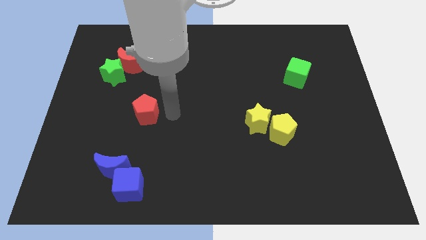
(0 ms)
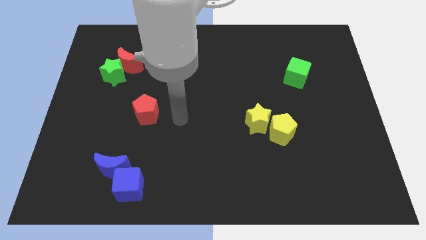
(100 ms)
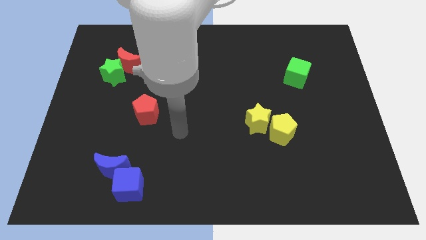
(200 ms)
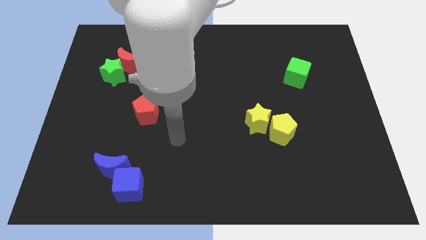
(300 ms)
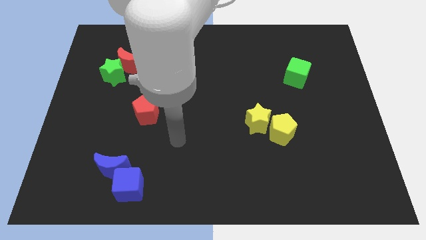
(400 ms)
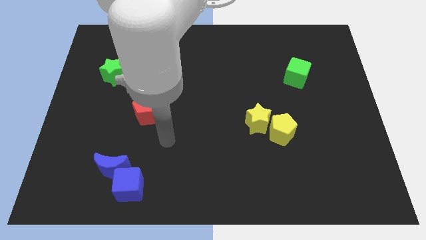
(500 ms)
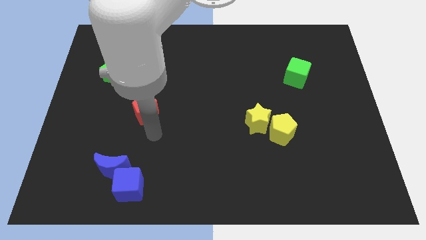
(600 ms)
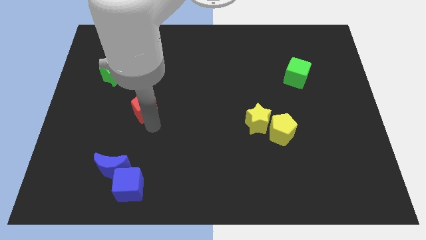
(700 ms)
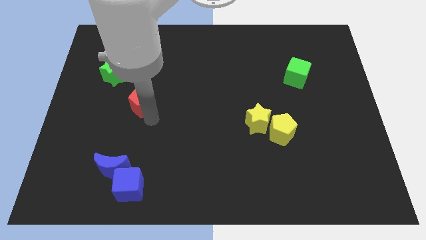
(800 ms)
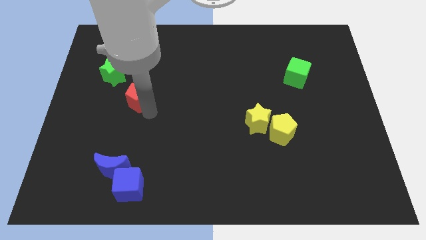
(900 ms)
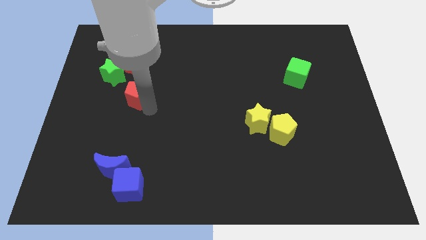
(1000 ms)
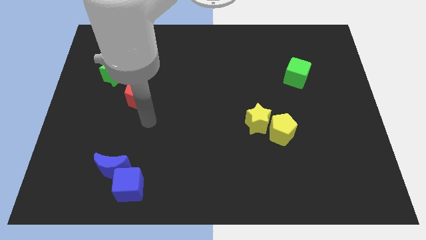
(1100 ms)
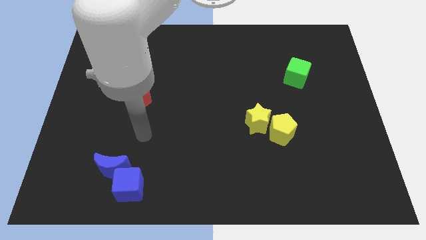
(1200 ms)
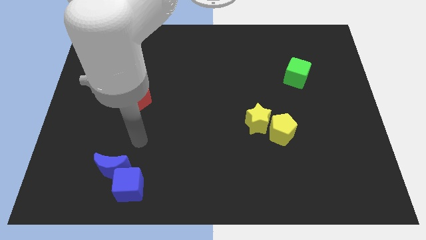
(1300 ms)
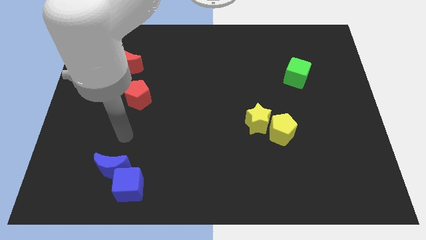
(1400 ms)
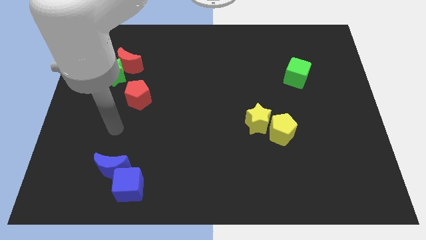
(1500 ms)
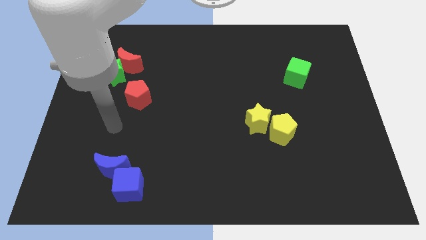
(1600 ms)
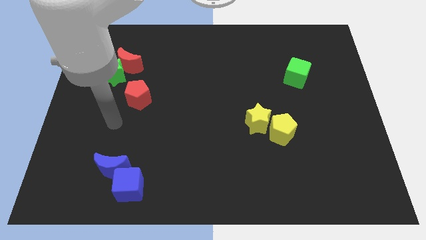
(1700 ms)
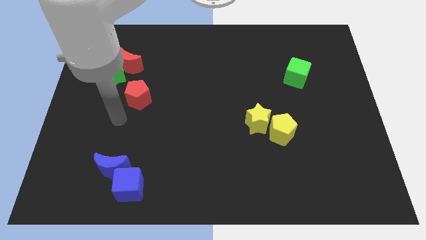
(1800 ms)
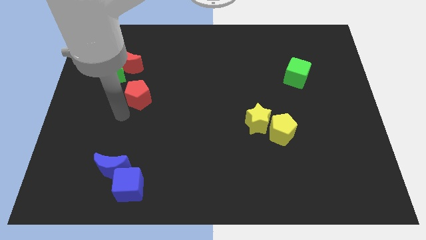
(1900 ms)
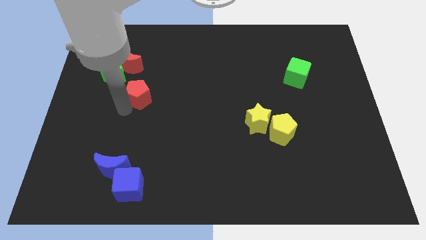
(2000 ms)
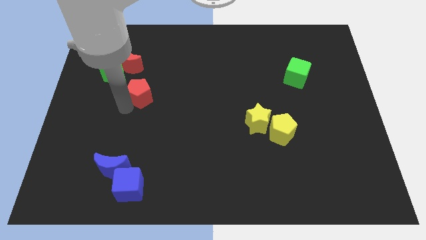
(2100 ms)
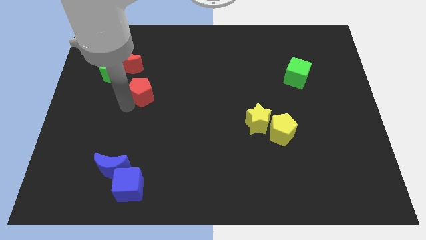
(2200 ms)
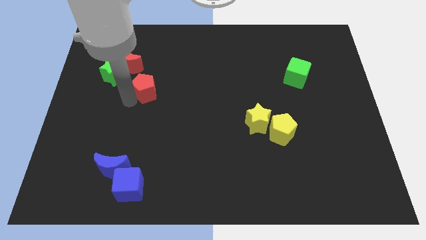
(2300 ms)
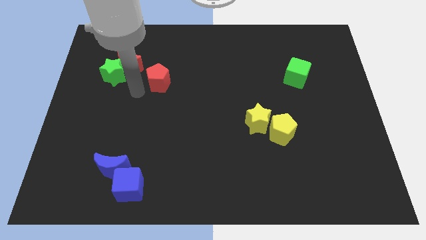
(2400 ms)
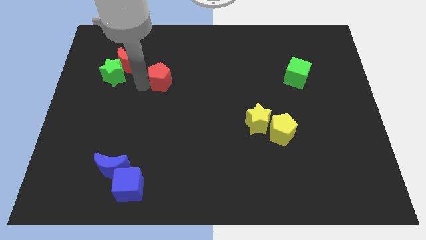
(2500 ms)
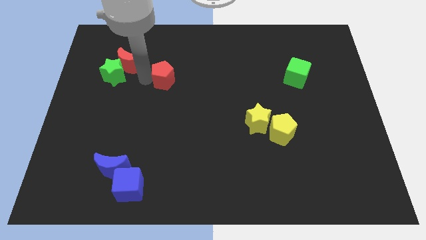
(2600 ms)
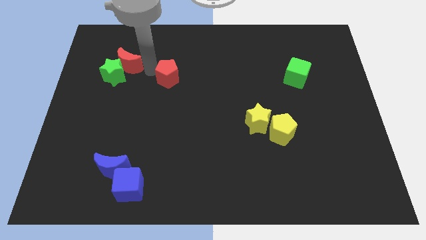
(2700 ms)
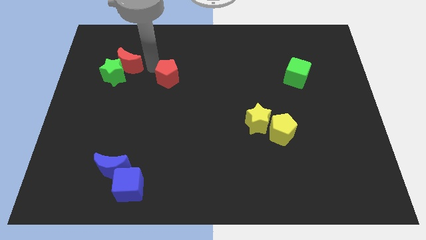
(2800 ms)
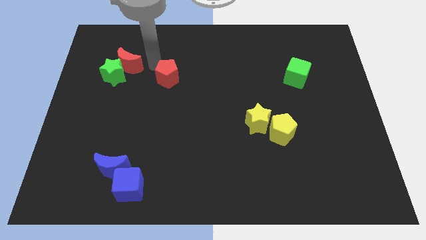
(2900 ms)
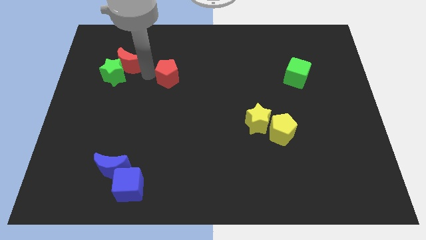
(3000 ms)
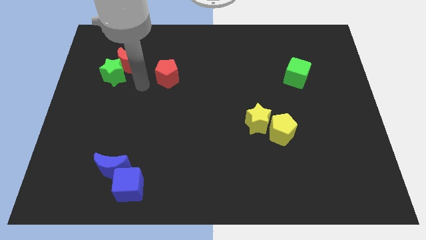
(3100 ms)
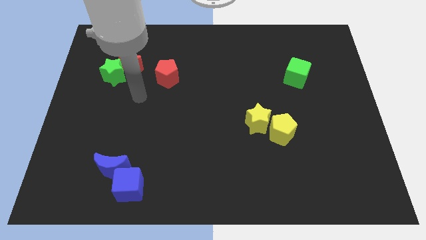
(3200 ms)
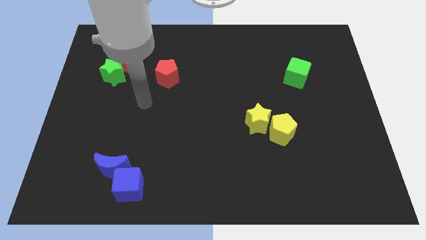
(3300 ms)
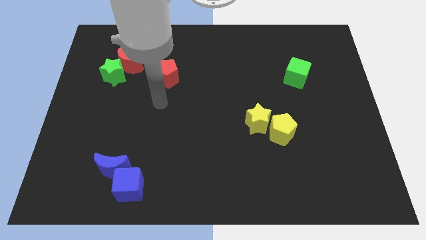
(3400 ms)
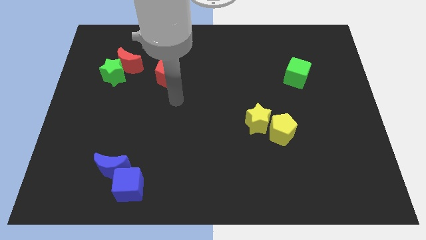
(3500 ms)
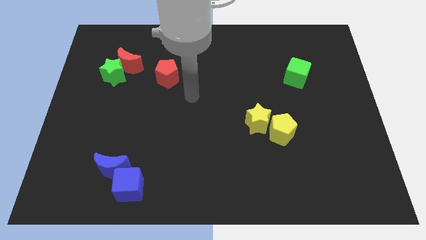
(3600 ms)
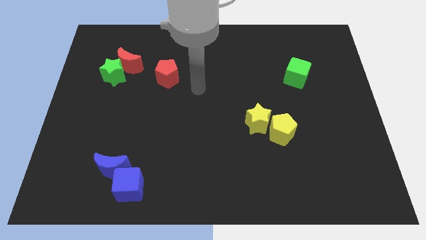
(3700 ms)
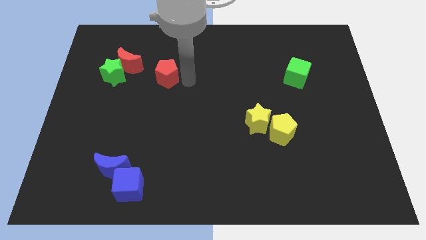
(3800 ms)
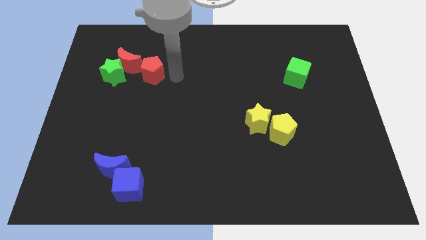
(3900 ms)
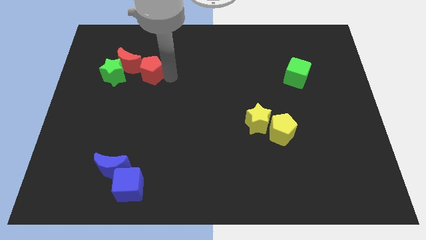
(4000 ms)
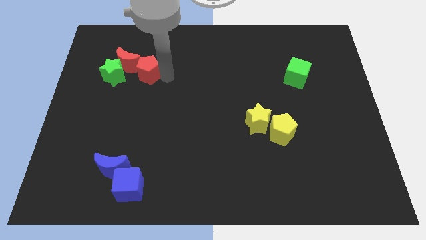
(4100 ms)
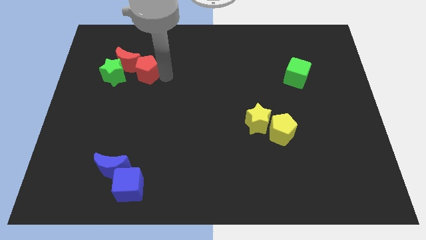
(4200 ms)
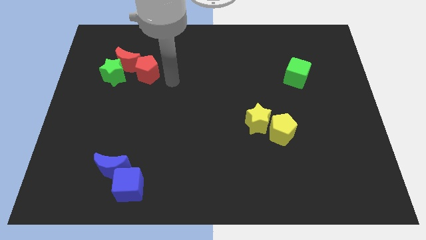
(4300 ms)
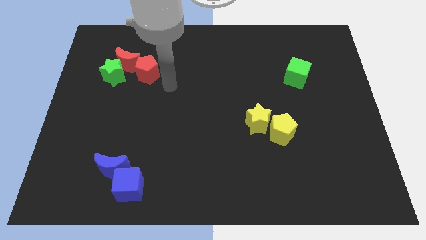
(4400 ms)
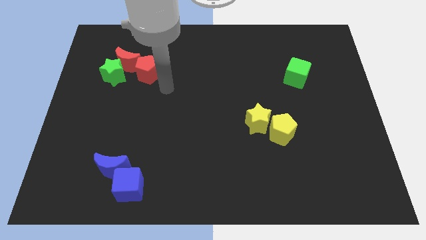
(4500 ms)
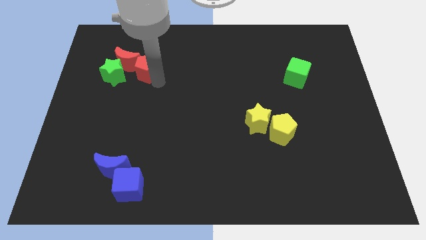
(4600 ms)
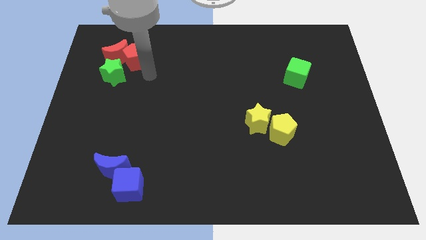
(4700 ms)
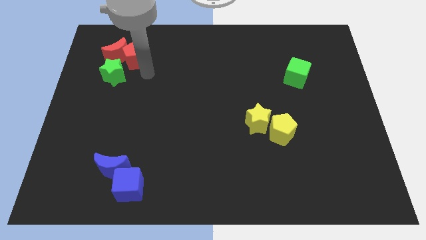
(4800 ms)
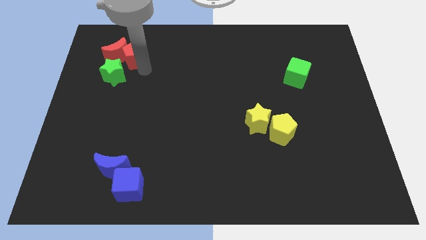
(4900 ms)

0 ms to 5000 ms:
move red pentagon right beside the red moon

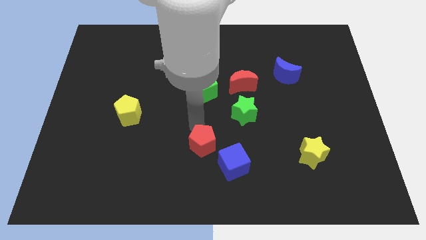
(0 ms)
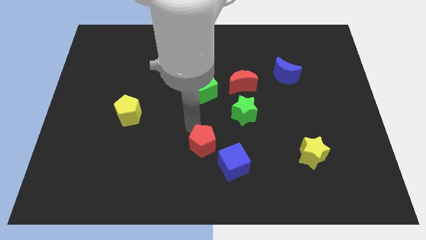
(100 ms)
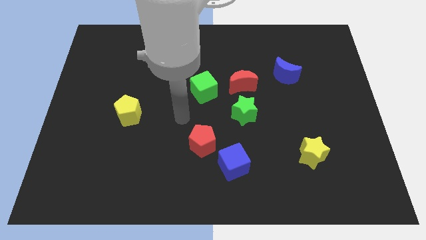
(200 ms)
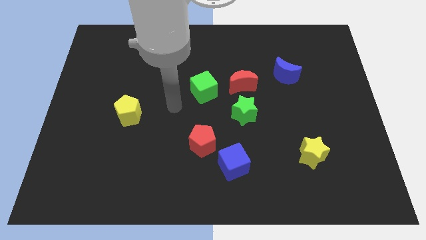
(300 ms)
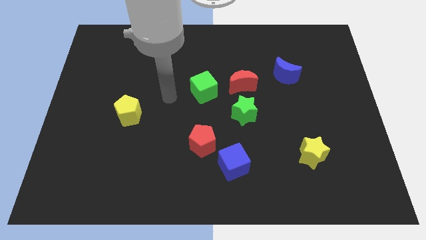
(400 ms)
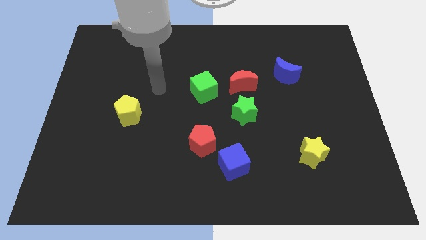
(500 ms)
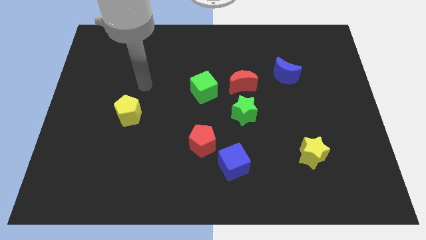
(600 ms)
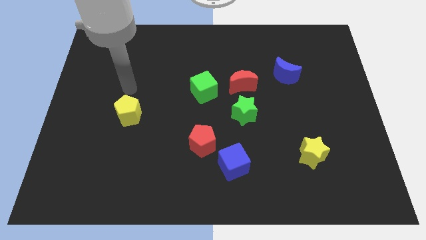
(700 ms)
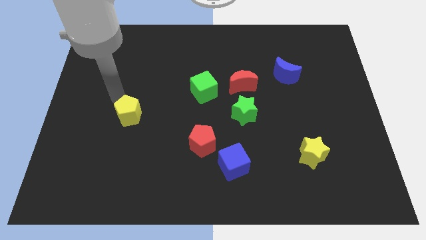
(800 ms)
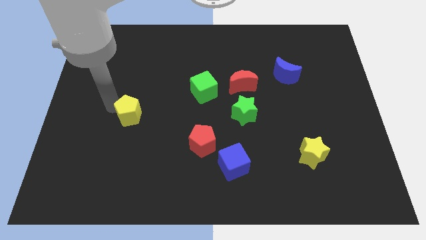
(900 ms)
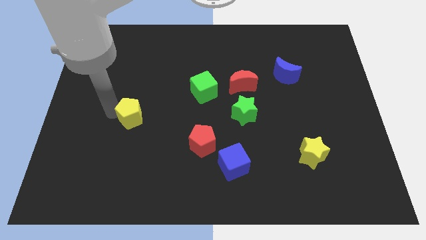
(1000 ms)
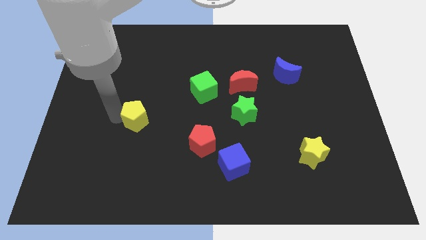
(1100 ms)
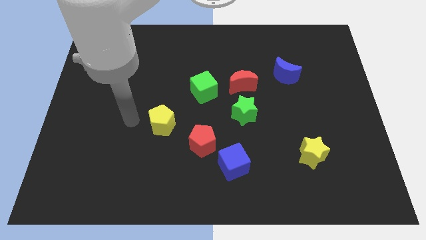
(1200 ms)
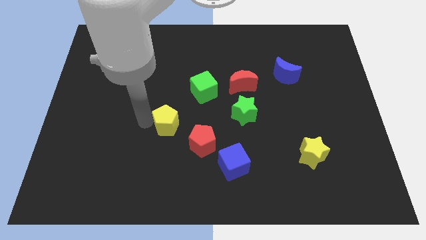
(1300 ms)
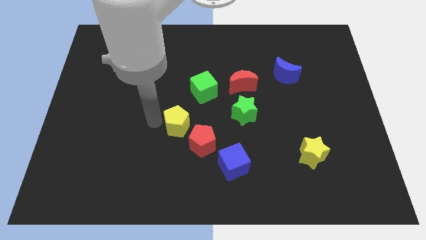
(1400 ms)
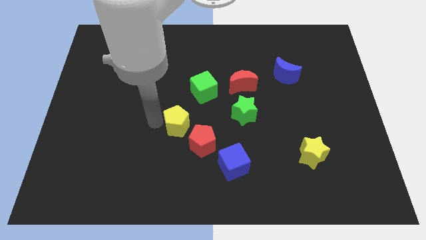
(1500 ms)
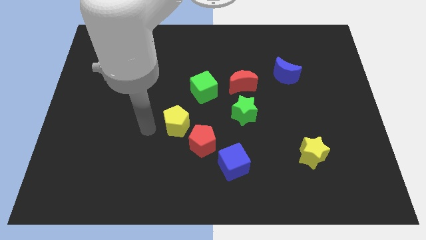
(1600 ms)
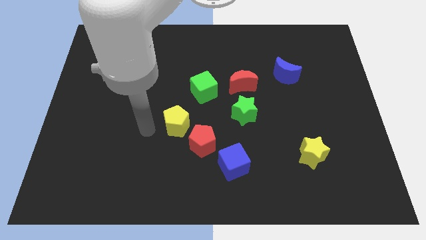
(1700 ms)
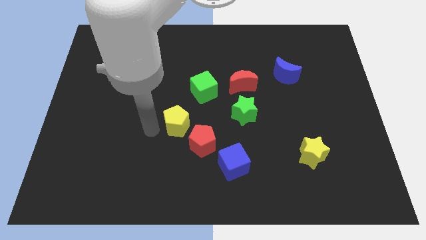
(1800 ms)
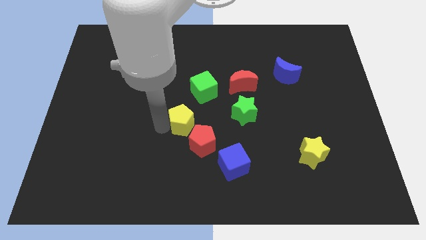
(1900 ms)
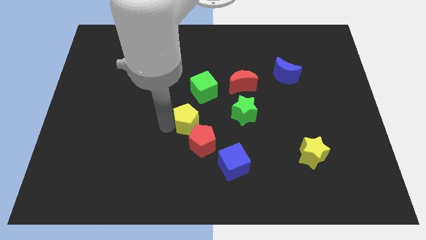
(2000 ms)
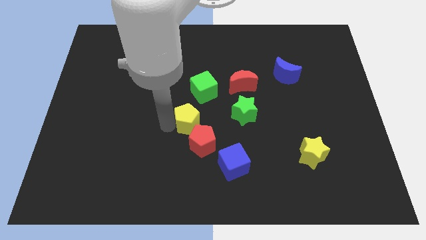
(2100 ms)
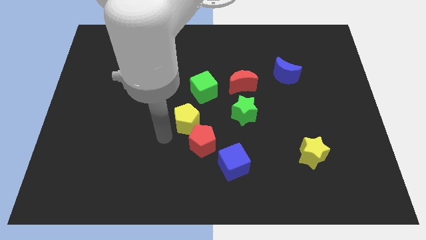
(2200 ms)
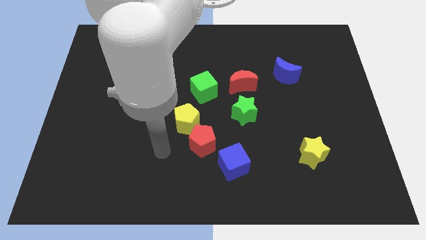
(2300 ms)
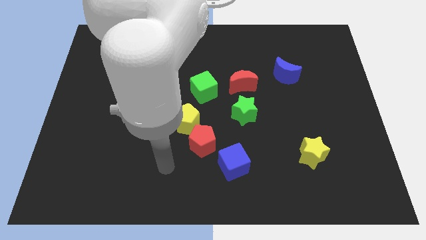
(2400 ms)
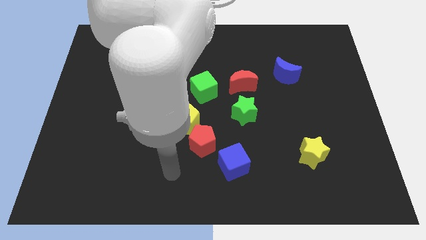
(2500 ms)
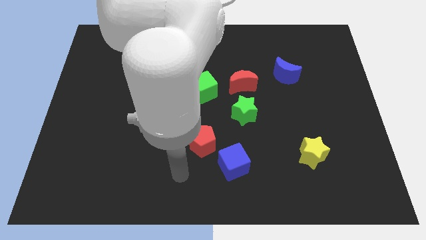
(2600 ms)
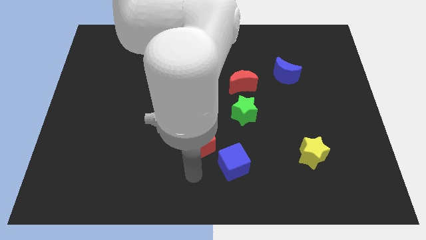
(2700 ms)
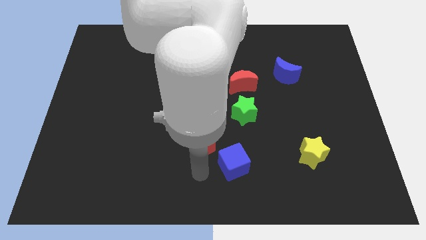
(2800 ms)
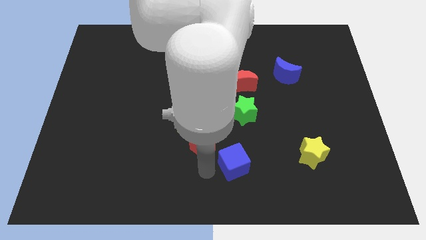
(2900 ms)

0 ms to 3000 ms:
place the yellow pentagon above the red pentagon

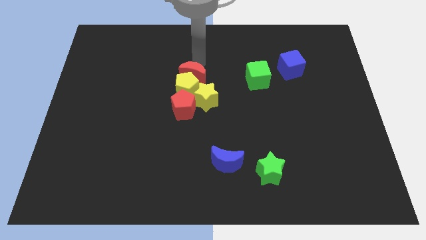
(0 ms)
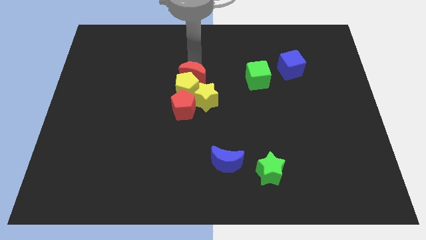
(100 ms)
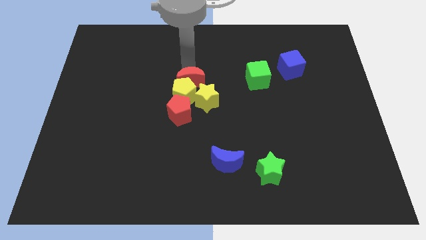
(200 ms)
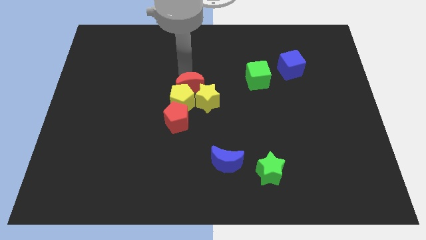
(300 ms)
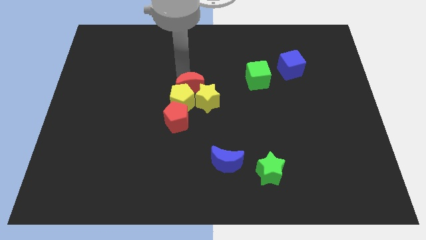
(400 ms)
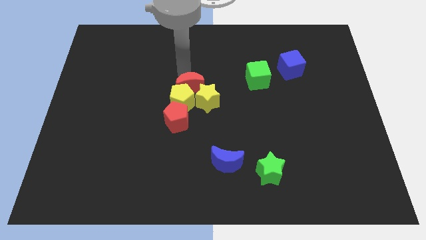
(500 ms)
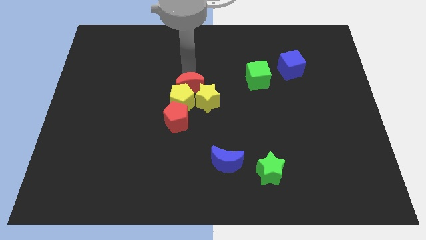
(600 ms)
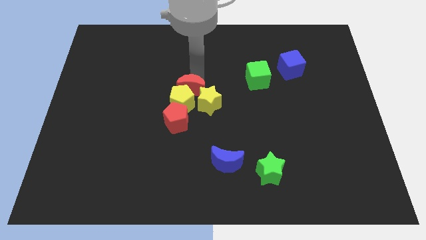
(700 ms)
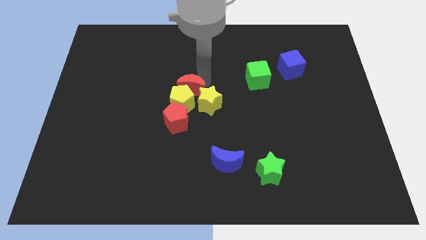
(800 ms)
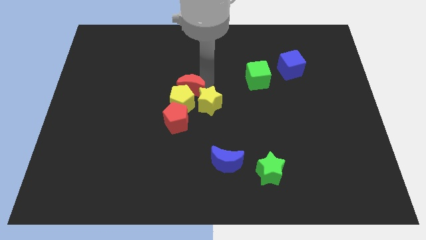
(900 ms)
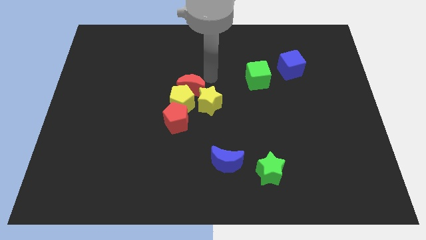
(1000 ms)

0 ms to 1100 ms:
push the red crescente towards down side alightly
